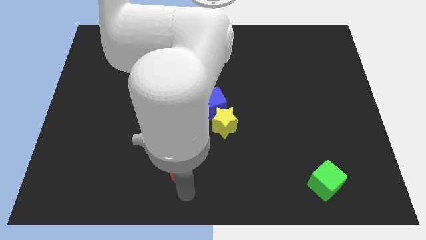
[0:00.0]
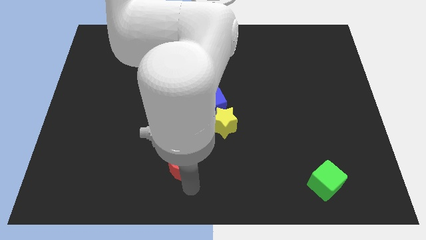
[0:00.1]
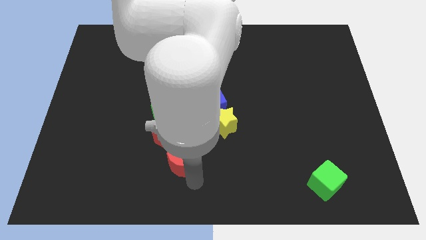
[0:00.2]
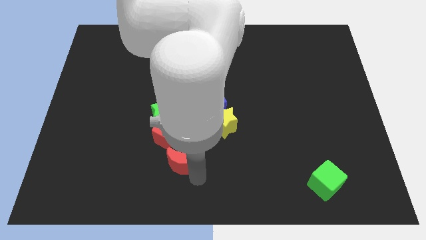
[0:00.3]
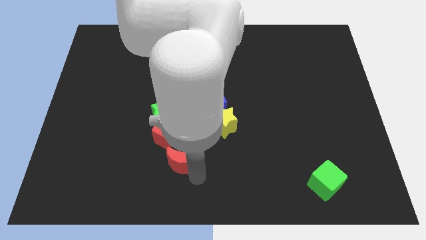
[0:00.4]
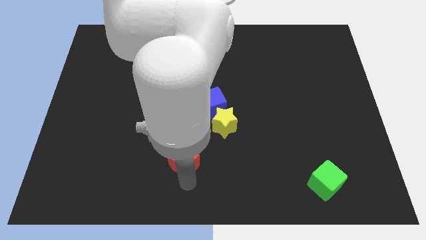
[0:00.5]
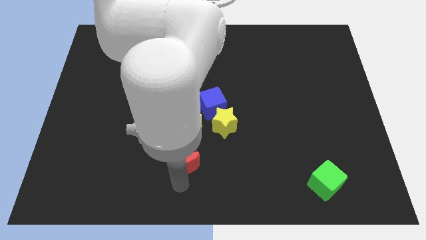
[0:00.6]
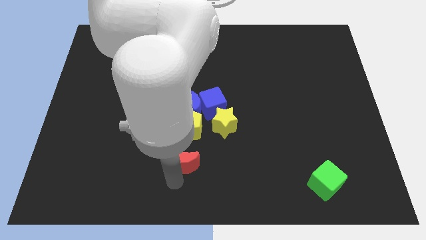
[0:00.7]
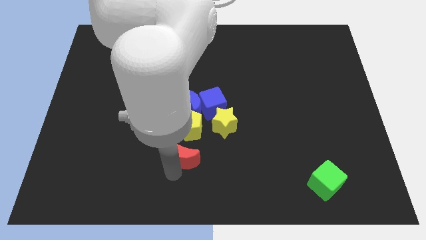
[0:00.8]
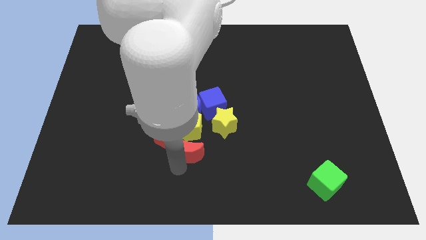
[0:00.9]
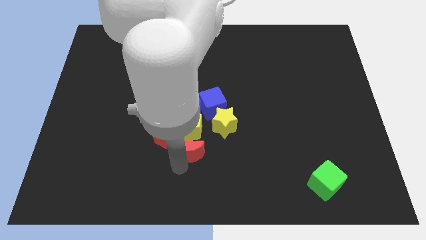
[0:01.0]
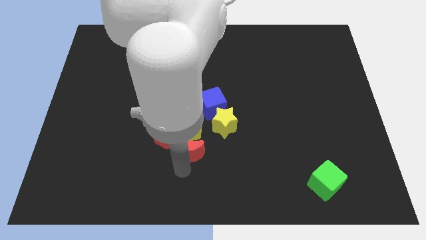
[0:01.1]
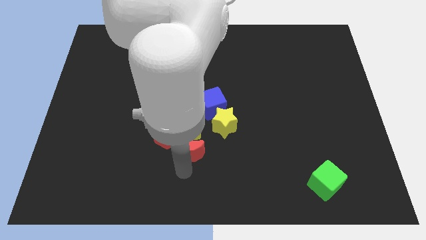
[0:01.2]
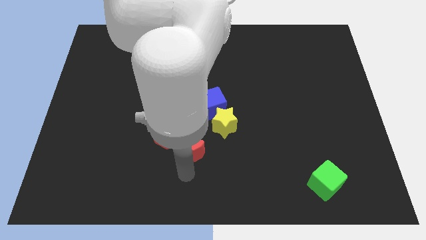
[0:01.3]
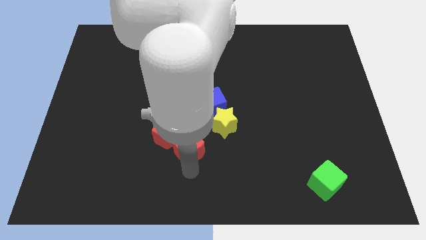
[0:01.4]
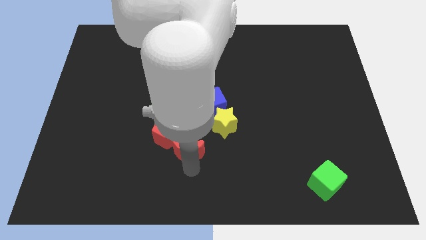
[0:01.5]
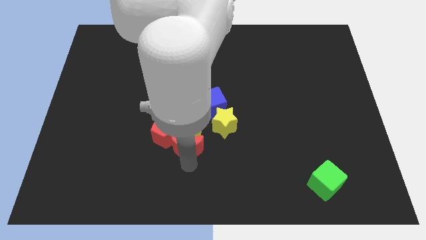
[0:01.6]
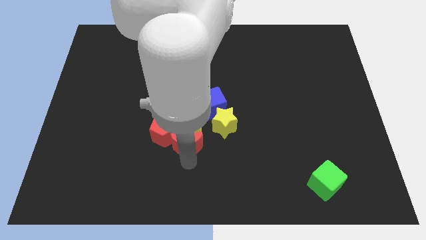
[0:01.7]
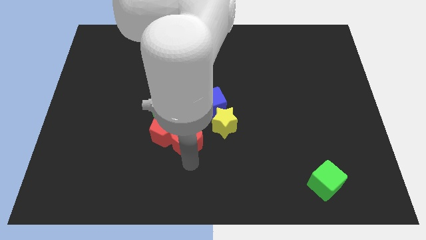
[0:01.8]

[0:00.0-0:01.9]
move red crescent towards the yellow pentagon

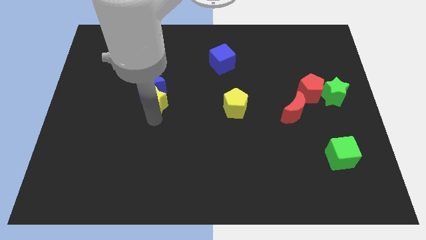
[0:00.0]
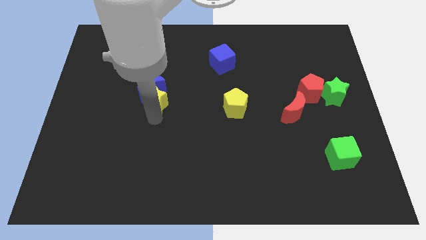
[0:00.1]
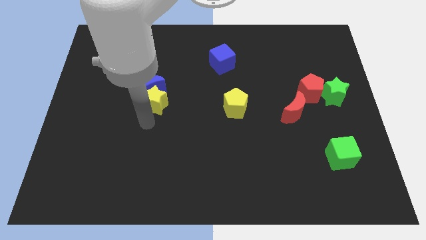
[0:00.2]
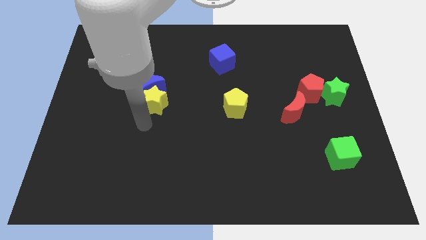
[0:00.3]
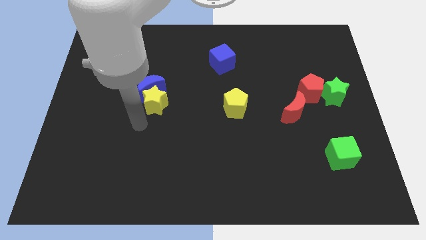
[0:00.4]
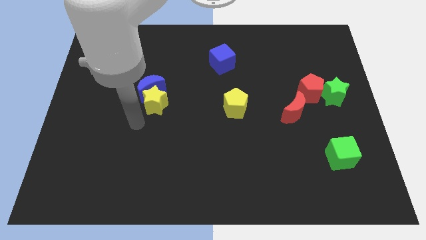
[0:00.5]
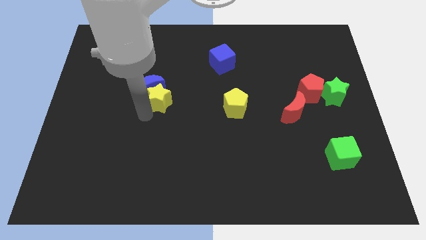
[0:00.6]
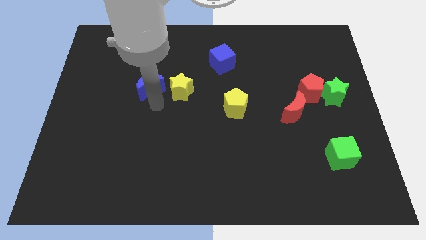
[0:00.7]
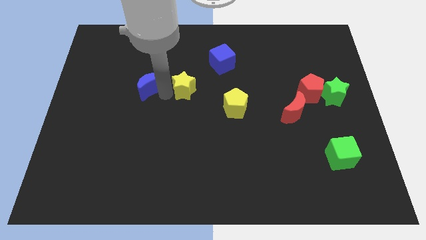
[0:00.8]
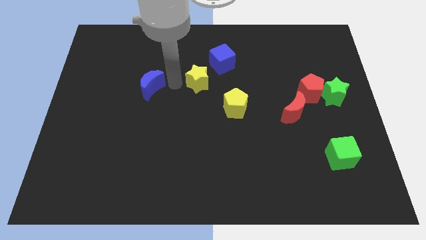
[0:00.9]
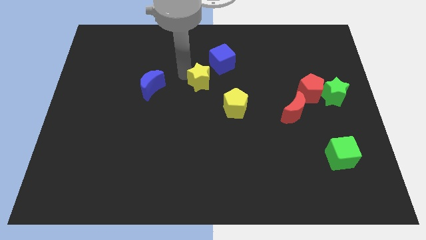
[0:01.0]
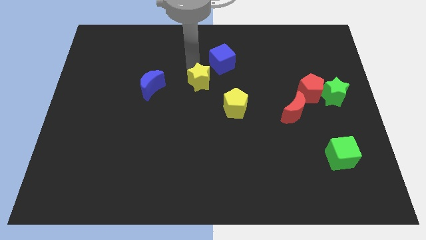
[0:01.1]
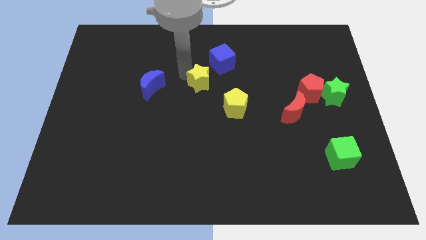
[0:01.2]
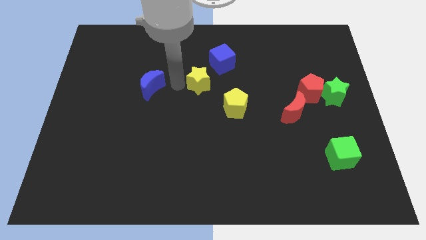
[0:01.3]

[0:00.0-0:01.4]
push yellow star diagonally on the bottom left side of the blue cube

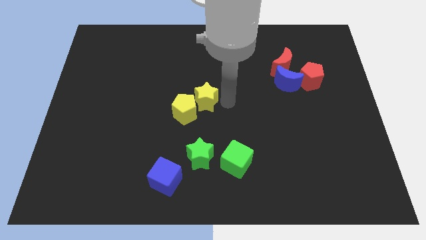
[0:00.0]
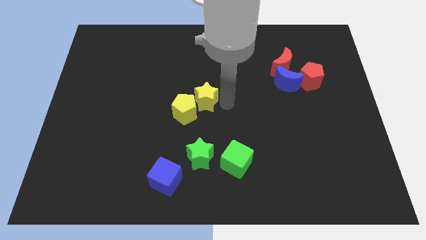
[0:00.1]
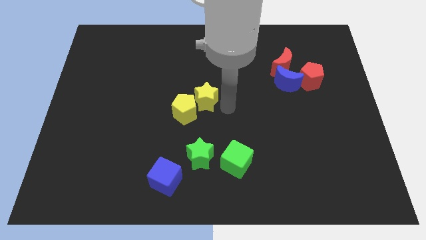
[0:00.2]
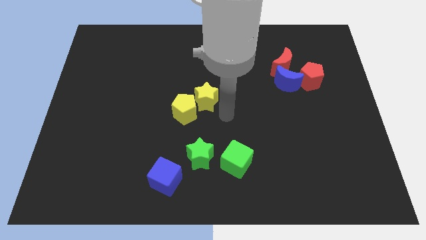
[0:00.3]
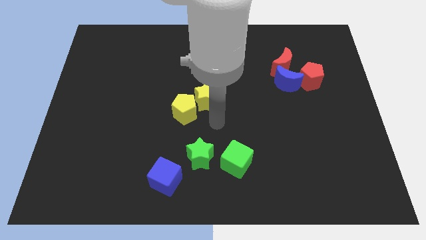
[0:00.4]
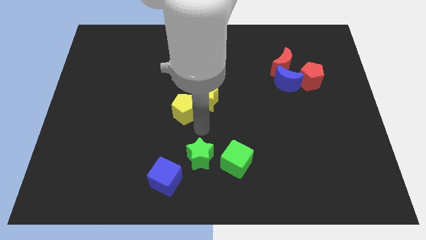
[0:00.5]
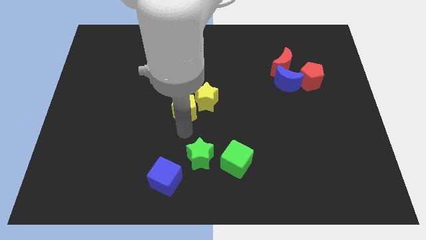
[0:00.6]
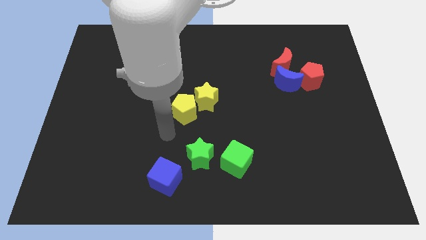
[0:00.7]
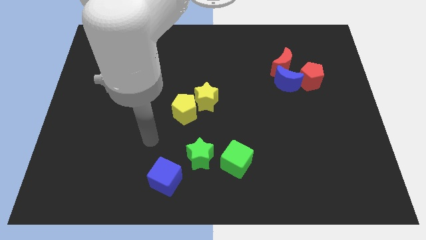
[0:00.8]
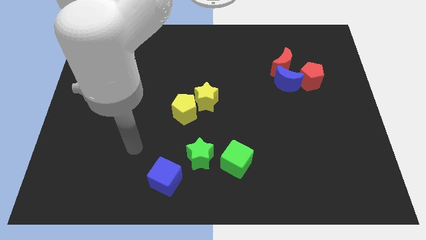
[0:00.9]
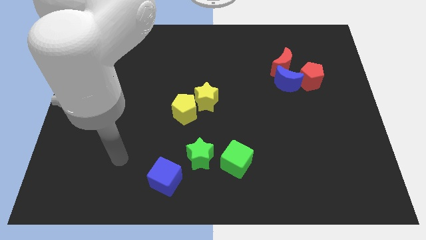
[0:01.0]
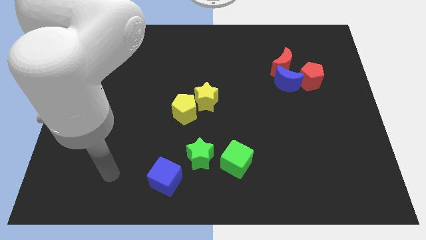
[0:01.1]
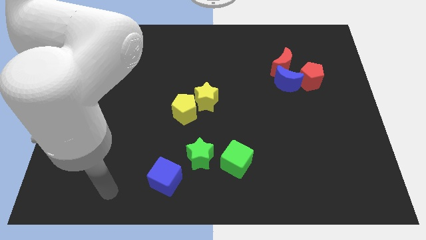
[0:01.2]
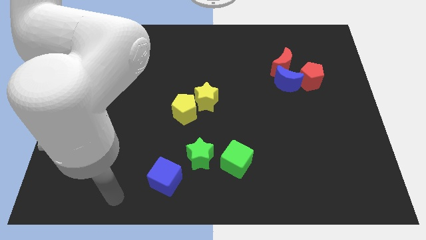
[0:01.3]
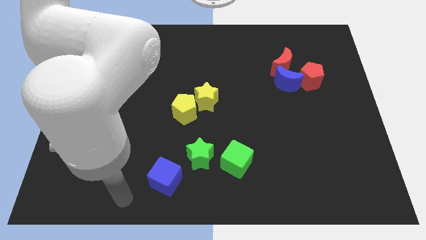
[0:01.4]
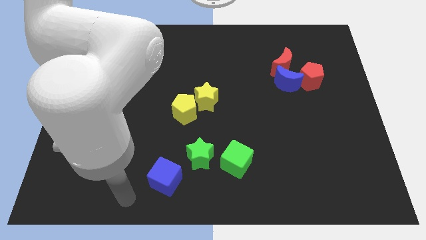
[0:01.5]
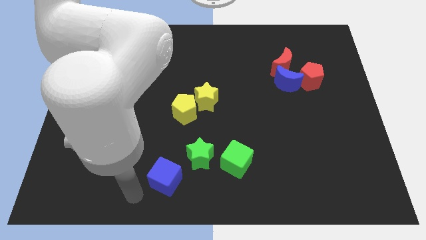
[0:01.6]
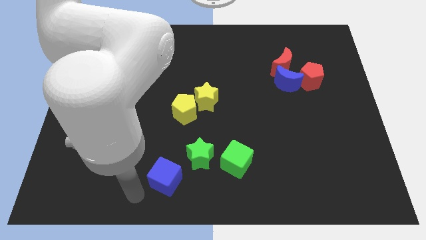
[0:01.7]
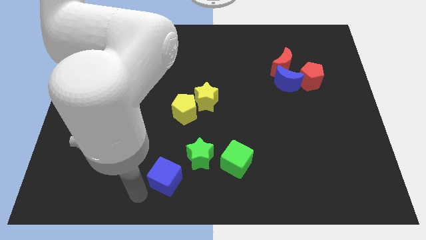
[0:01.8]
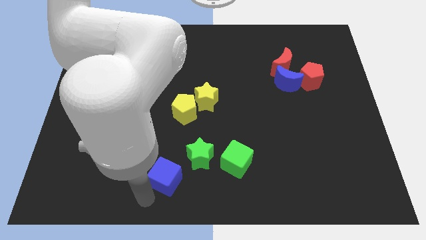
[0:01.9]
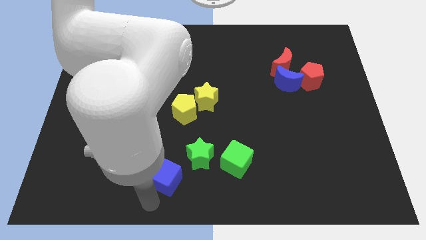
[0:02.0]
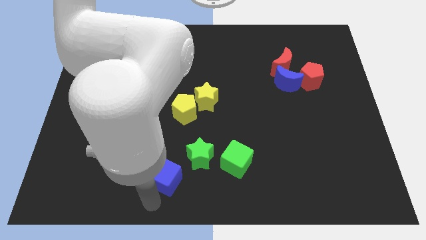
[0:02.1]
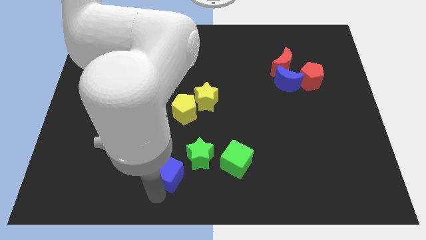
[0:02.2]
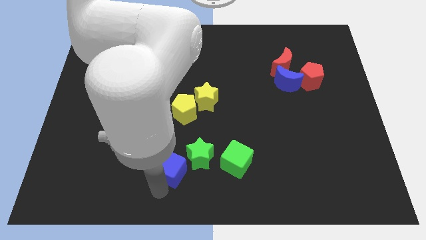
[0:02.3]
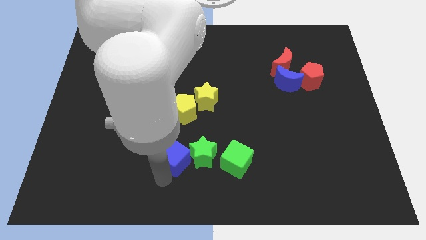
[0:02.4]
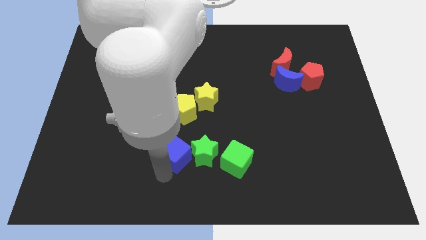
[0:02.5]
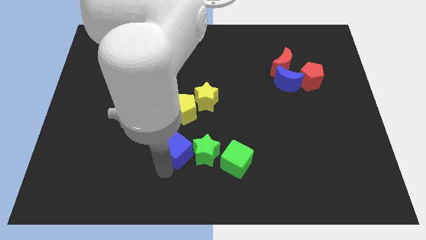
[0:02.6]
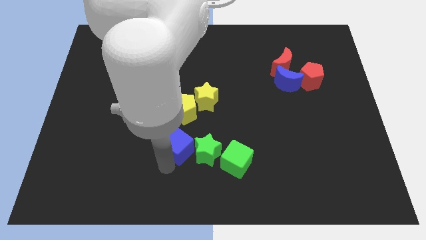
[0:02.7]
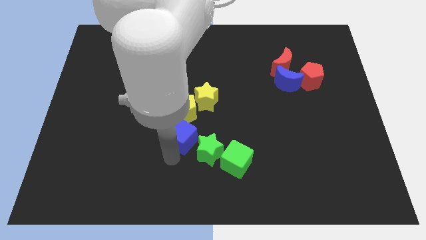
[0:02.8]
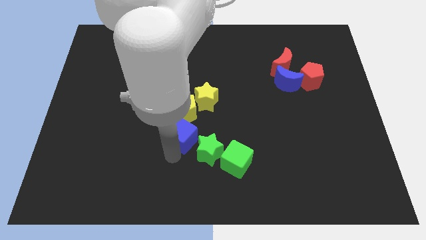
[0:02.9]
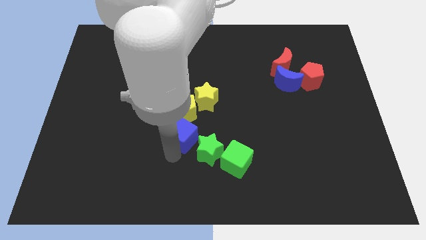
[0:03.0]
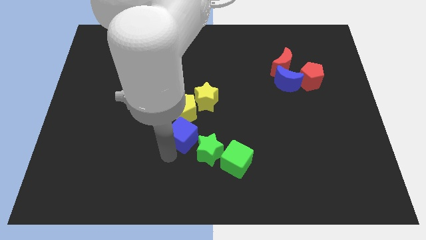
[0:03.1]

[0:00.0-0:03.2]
slide the blue cube diagonally top left to the green star

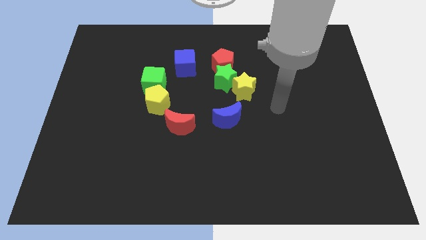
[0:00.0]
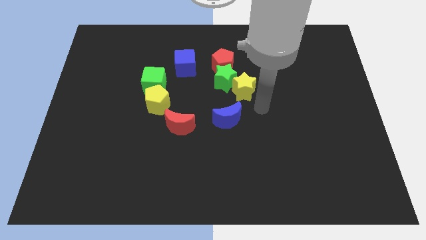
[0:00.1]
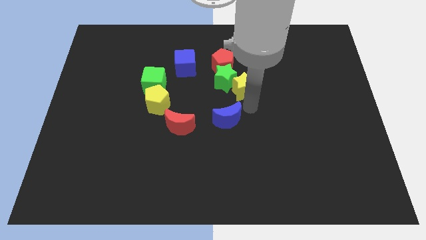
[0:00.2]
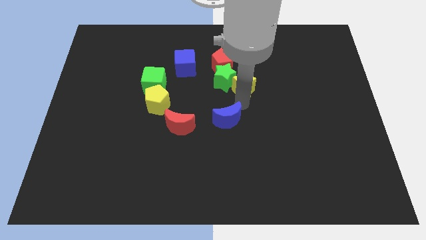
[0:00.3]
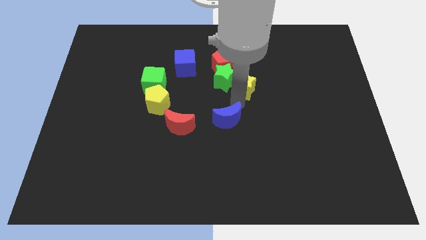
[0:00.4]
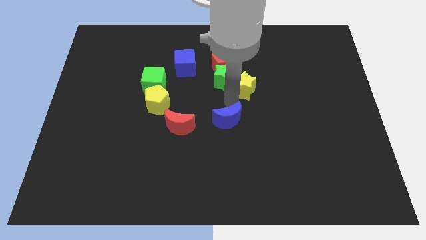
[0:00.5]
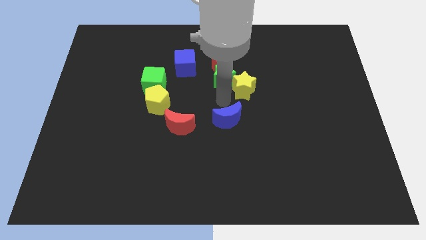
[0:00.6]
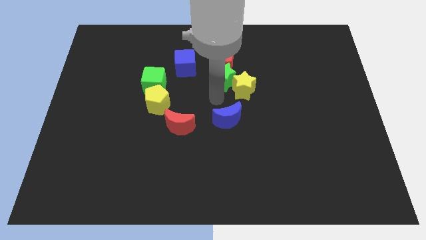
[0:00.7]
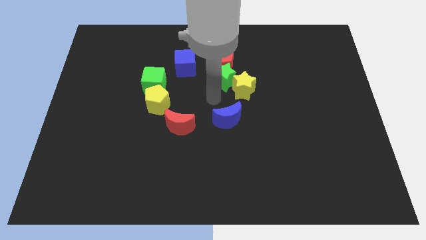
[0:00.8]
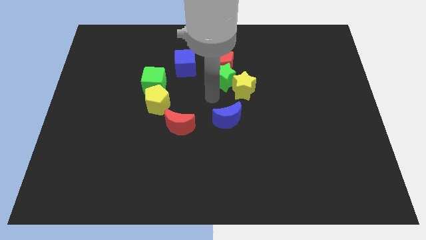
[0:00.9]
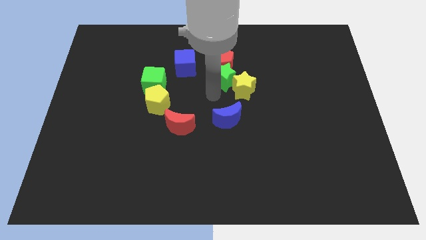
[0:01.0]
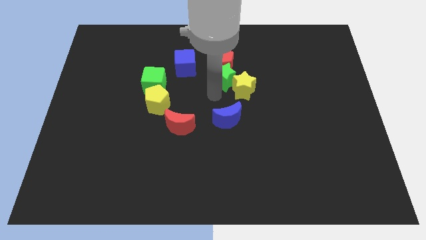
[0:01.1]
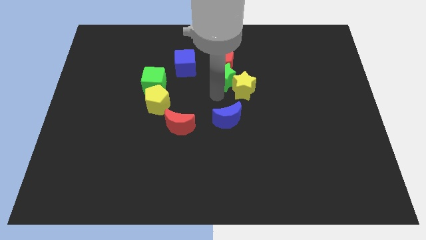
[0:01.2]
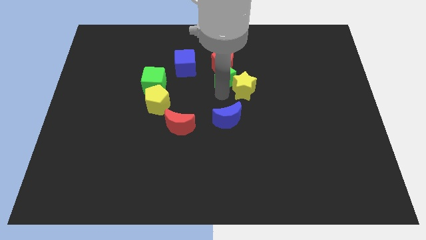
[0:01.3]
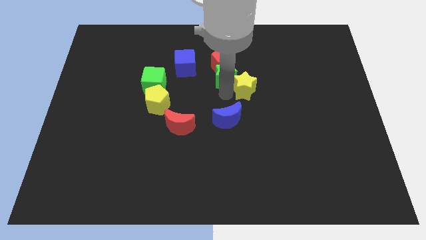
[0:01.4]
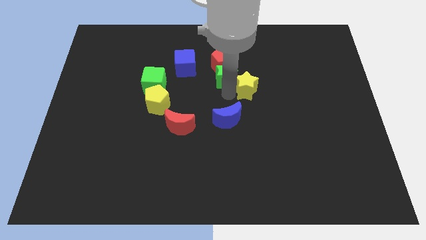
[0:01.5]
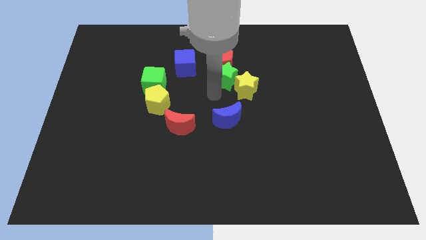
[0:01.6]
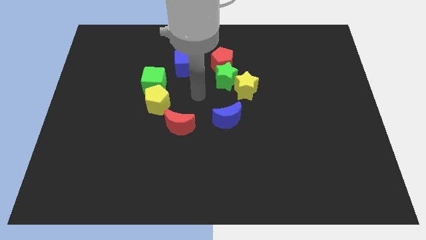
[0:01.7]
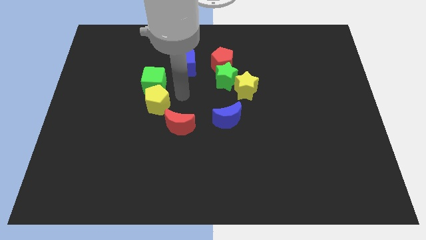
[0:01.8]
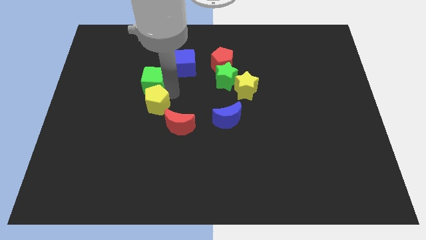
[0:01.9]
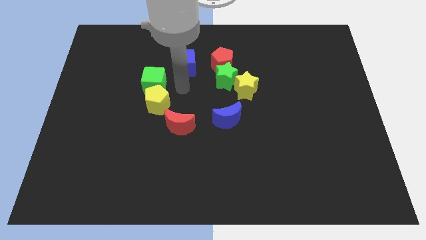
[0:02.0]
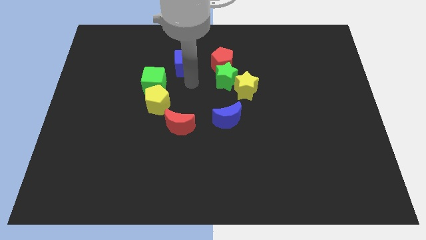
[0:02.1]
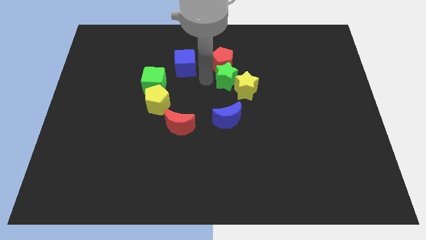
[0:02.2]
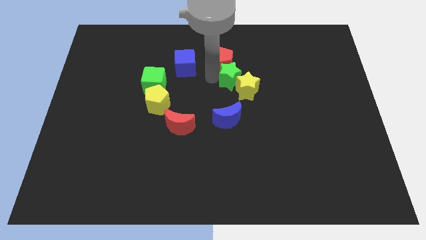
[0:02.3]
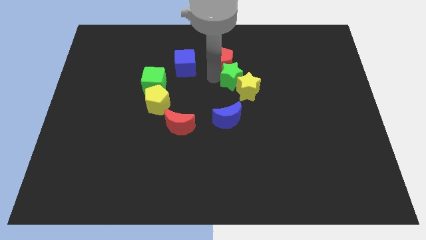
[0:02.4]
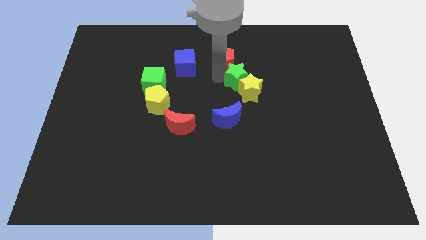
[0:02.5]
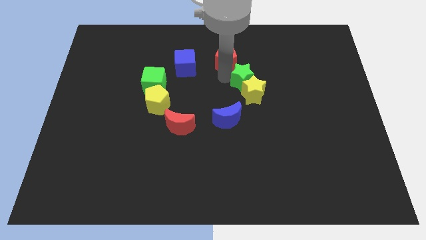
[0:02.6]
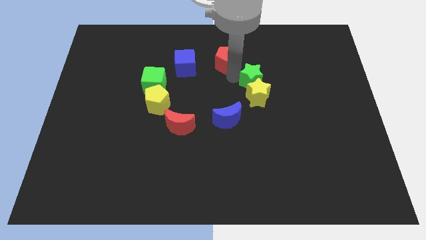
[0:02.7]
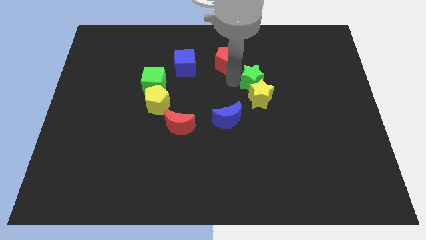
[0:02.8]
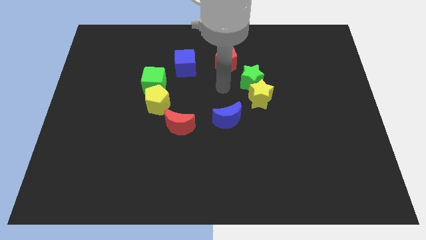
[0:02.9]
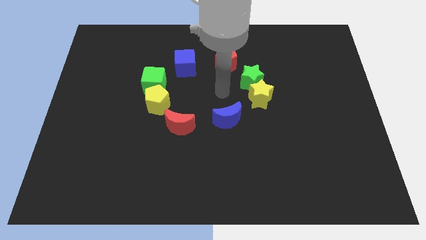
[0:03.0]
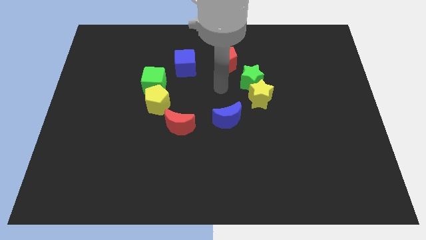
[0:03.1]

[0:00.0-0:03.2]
separate the yellow starsgreen star from the red pentagon
